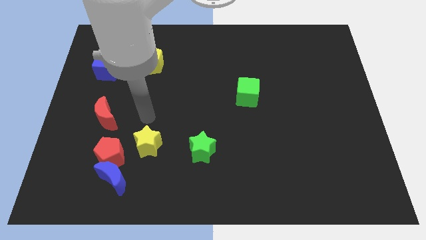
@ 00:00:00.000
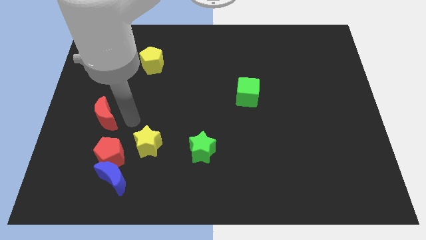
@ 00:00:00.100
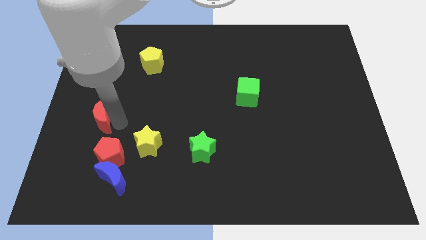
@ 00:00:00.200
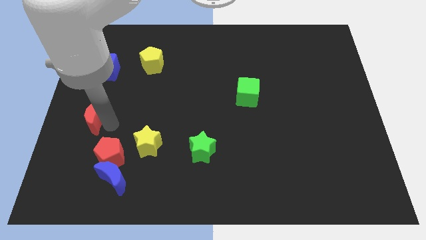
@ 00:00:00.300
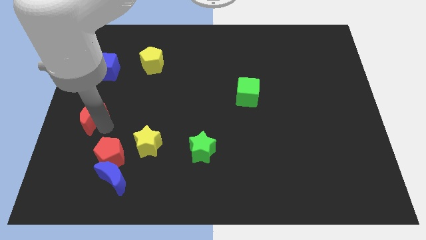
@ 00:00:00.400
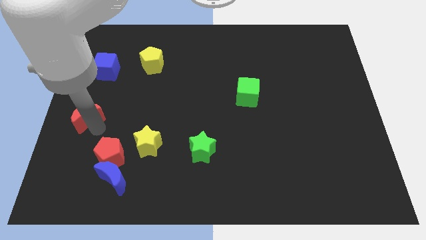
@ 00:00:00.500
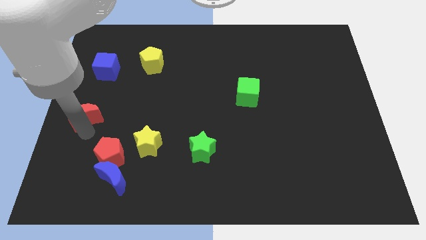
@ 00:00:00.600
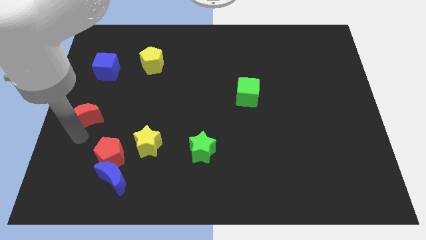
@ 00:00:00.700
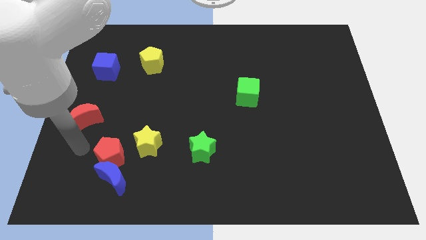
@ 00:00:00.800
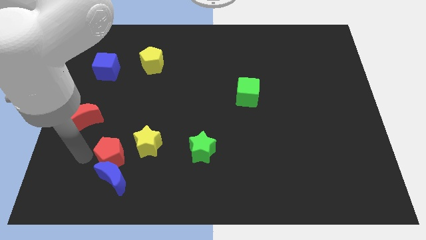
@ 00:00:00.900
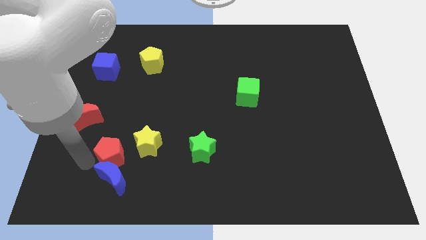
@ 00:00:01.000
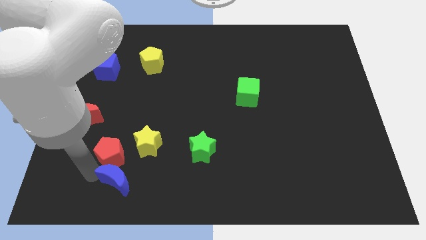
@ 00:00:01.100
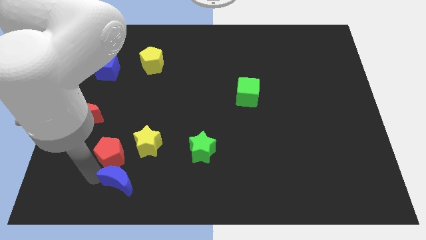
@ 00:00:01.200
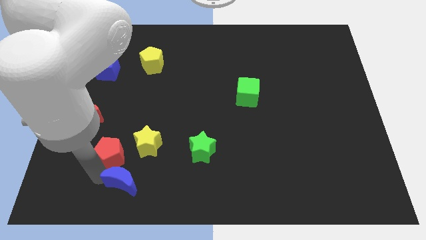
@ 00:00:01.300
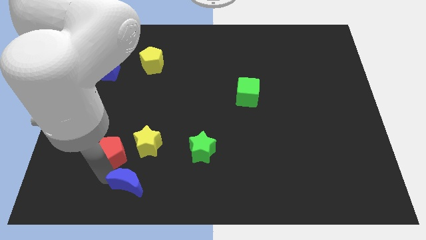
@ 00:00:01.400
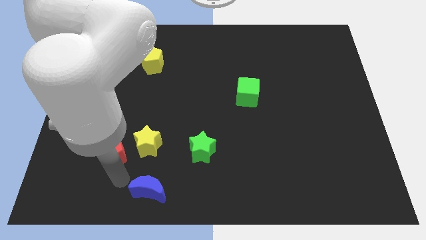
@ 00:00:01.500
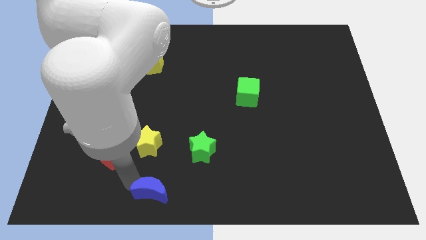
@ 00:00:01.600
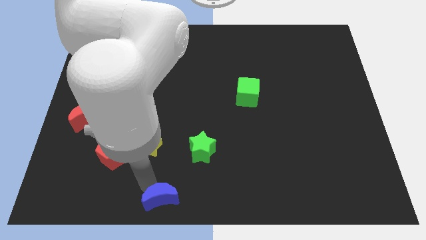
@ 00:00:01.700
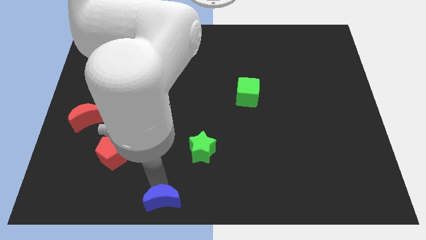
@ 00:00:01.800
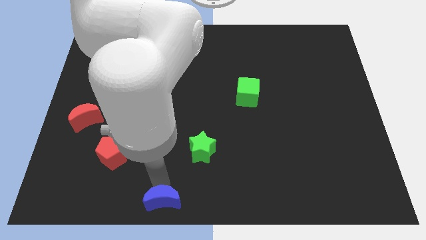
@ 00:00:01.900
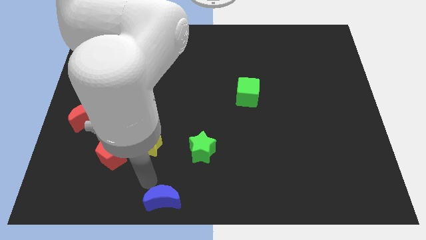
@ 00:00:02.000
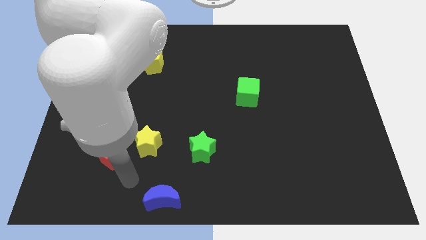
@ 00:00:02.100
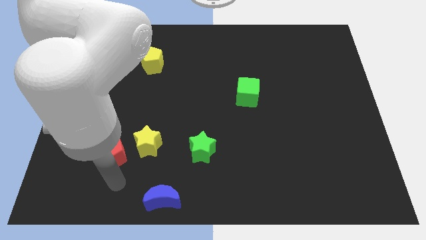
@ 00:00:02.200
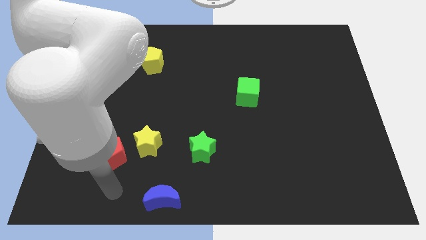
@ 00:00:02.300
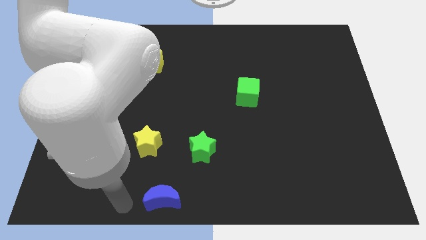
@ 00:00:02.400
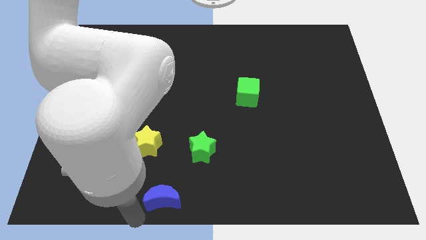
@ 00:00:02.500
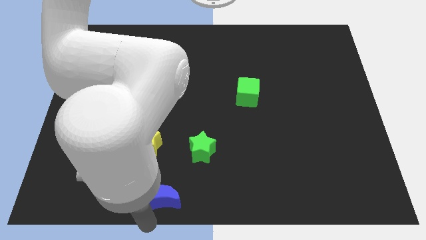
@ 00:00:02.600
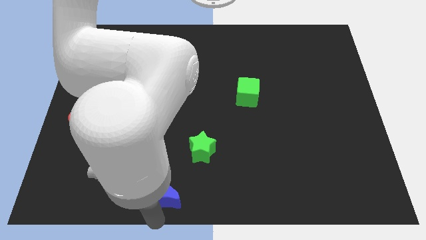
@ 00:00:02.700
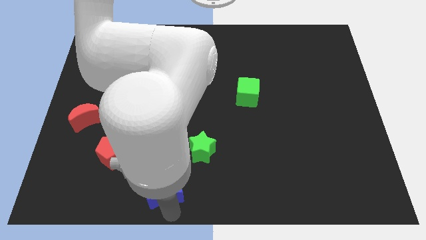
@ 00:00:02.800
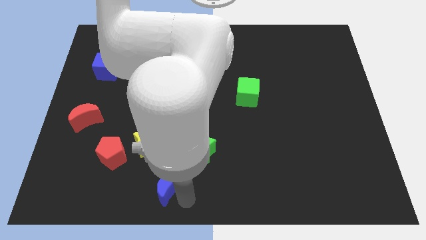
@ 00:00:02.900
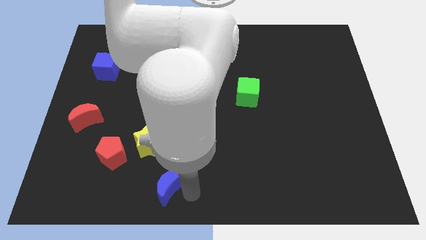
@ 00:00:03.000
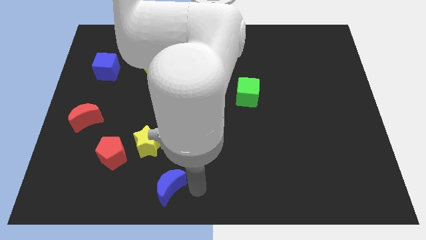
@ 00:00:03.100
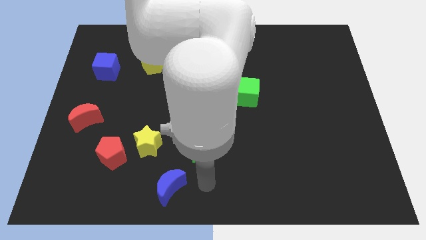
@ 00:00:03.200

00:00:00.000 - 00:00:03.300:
place the blue moon diagonal to the red pentagon

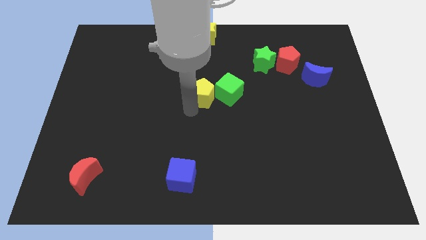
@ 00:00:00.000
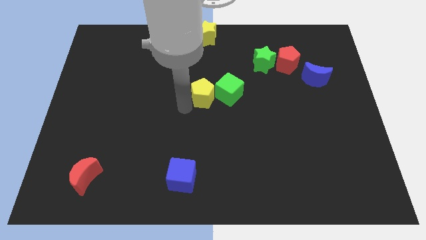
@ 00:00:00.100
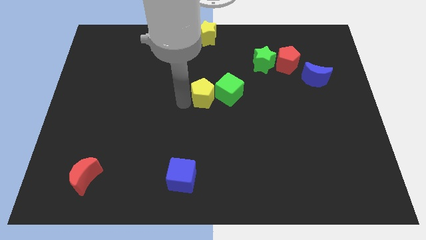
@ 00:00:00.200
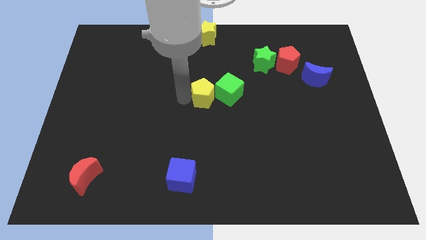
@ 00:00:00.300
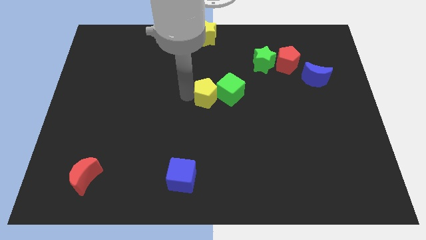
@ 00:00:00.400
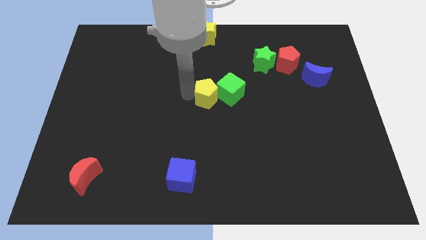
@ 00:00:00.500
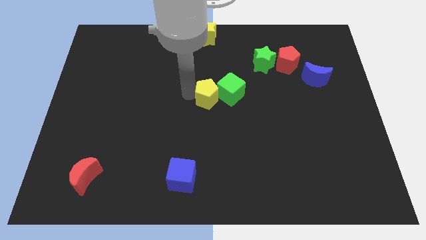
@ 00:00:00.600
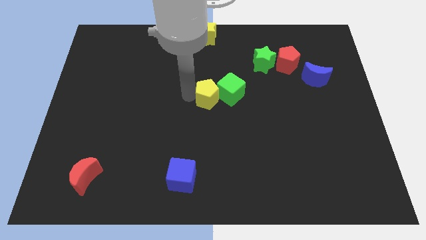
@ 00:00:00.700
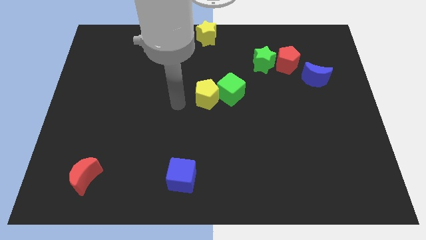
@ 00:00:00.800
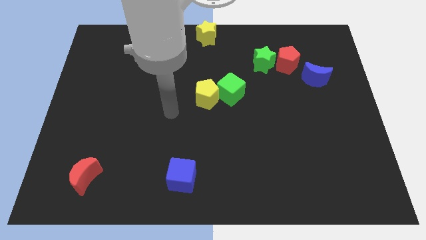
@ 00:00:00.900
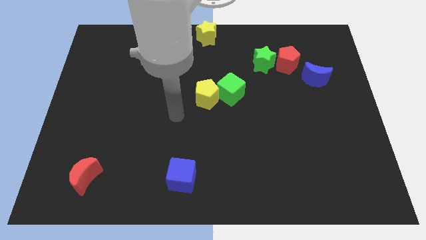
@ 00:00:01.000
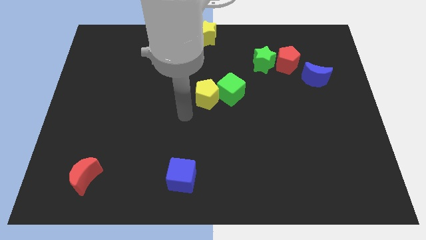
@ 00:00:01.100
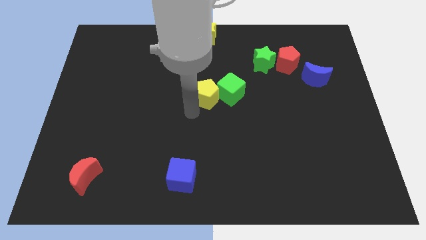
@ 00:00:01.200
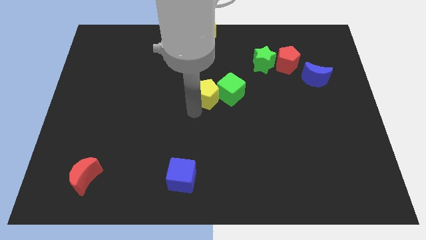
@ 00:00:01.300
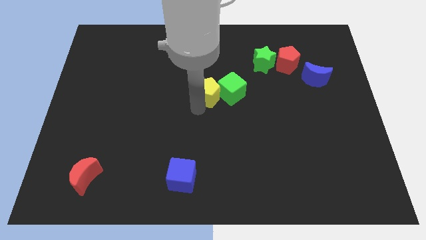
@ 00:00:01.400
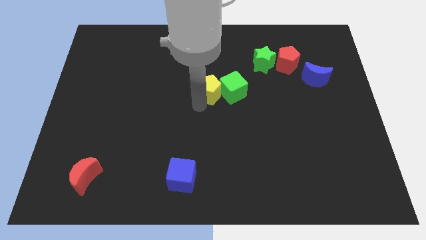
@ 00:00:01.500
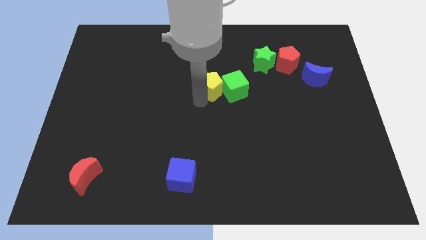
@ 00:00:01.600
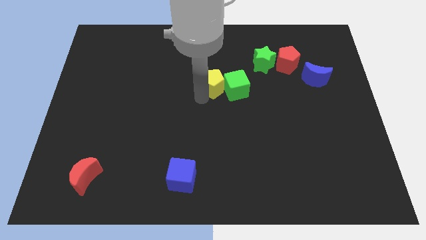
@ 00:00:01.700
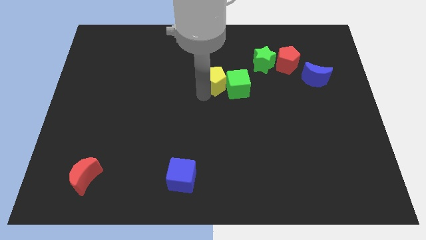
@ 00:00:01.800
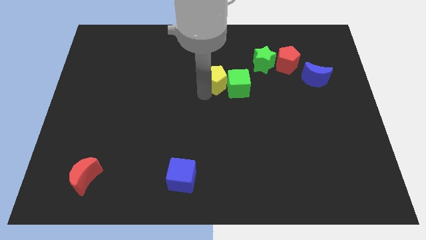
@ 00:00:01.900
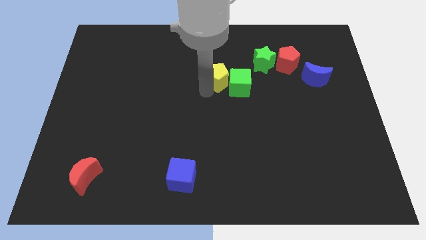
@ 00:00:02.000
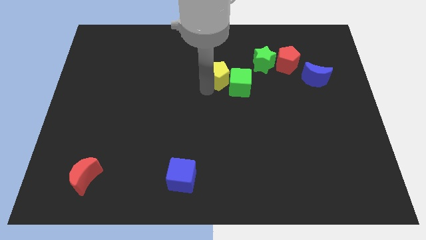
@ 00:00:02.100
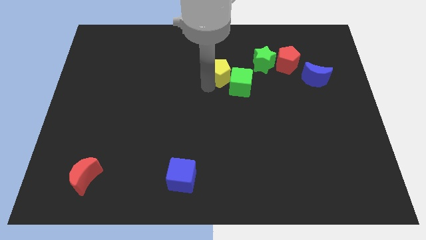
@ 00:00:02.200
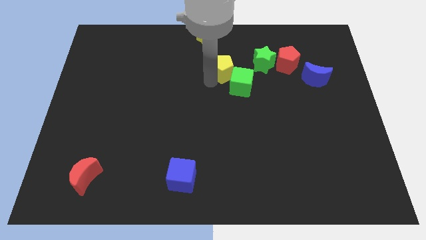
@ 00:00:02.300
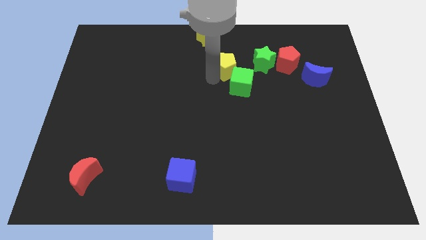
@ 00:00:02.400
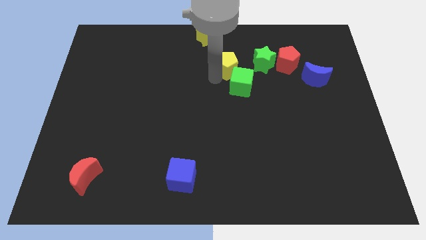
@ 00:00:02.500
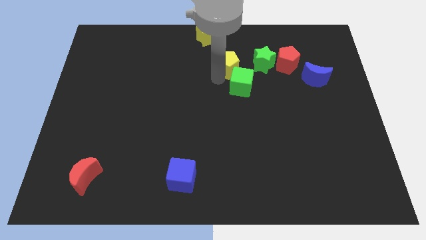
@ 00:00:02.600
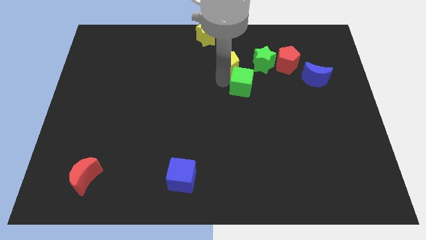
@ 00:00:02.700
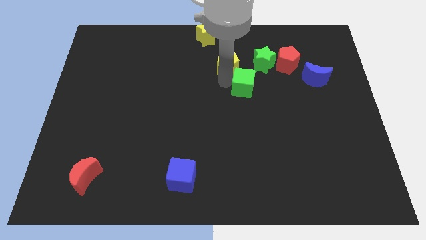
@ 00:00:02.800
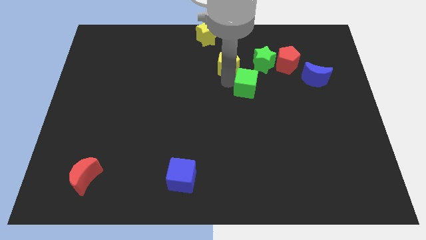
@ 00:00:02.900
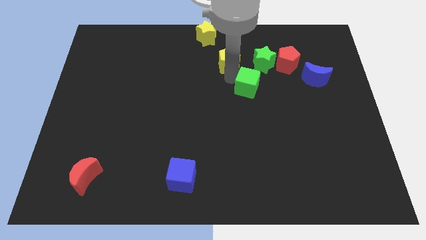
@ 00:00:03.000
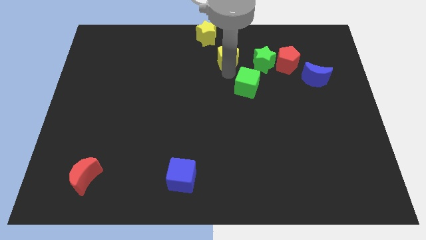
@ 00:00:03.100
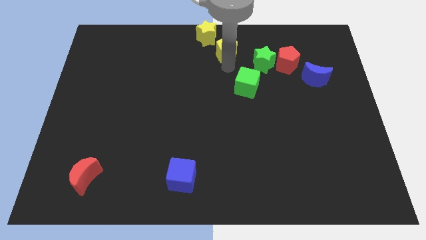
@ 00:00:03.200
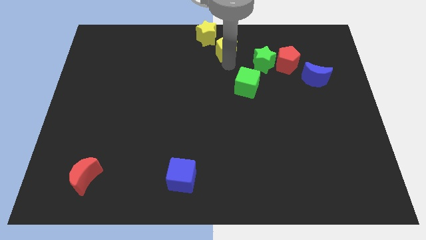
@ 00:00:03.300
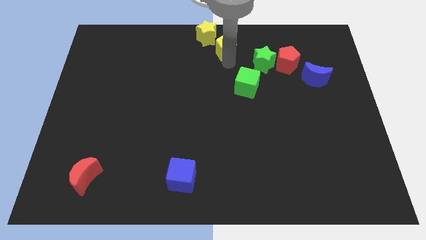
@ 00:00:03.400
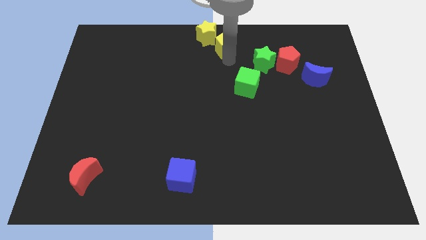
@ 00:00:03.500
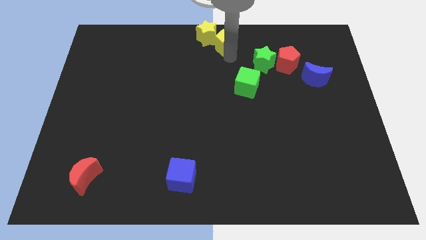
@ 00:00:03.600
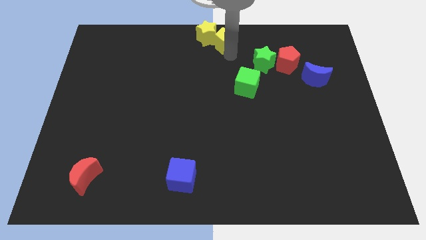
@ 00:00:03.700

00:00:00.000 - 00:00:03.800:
separate the yellow pentagon from the green cube

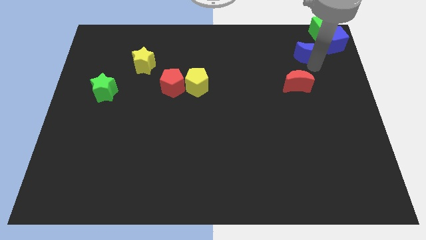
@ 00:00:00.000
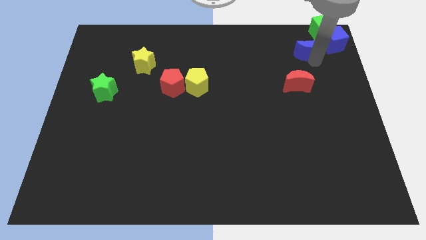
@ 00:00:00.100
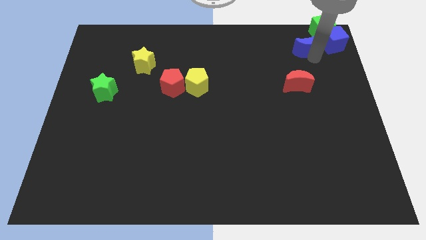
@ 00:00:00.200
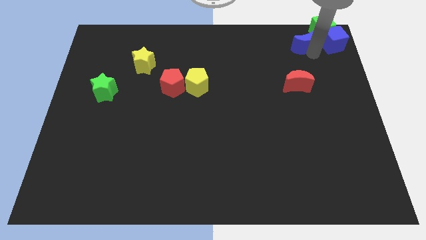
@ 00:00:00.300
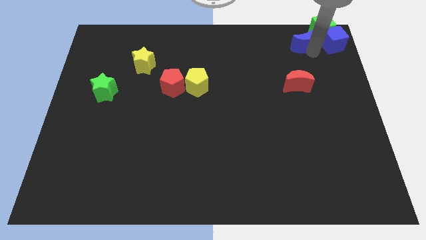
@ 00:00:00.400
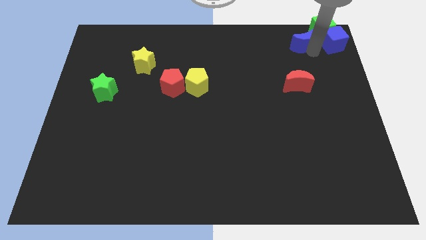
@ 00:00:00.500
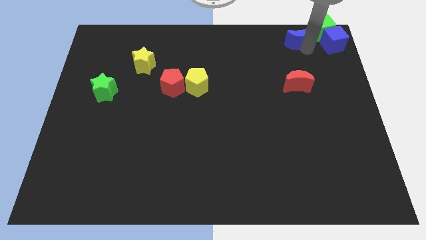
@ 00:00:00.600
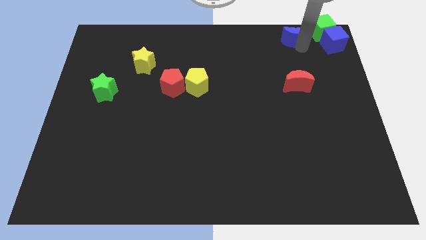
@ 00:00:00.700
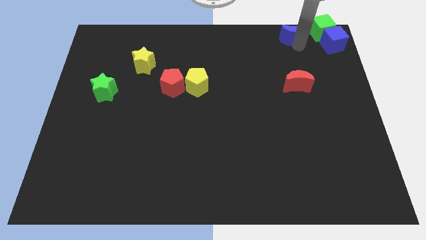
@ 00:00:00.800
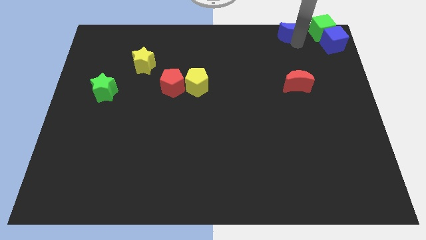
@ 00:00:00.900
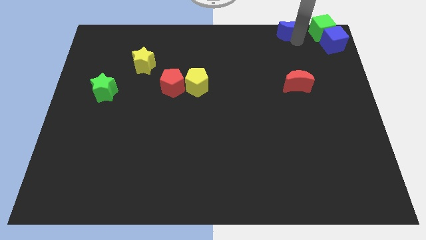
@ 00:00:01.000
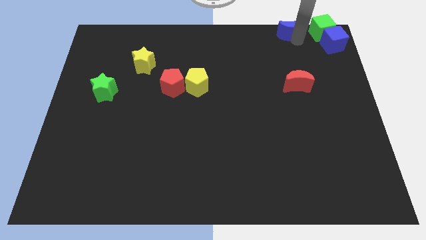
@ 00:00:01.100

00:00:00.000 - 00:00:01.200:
place the blue crescent to the left side of the green cube

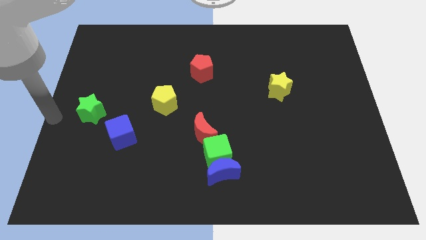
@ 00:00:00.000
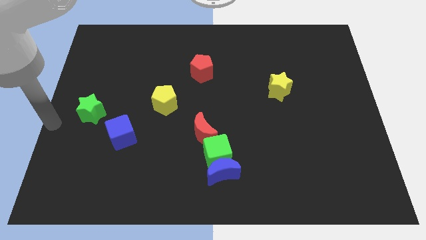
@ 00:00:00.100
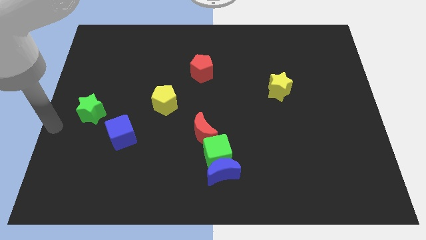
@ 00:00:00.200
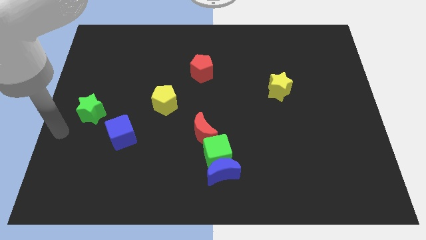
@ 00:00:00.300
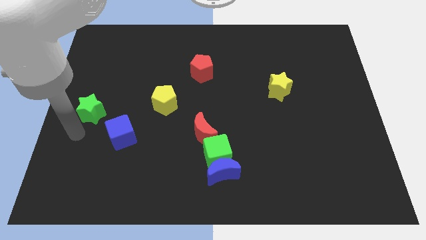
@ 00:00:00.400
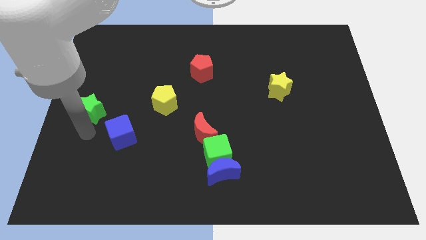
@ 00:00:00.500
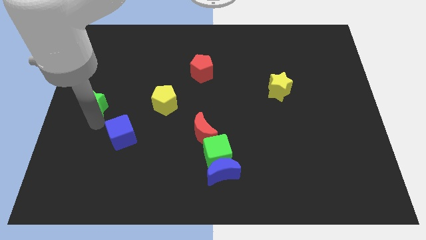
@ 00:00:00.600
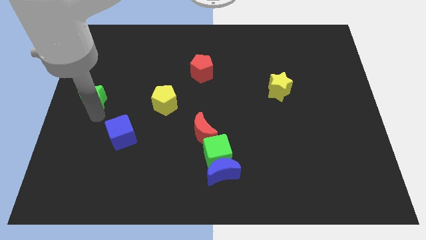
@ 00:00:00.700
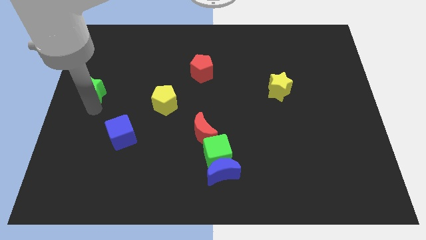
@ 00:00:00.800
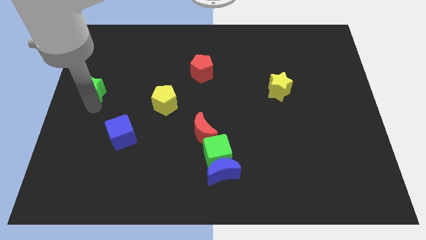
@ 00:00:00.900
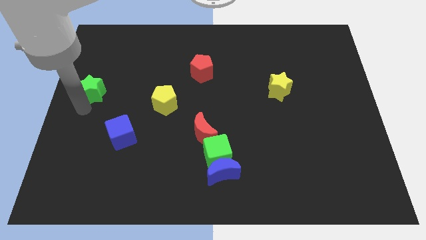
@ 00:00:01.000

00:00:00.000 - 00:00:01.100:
move the green star towards the top left of the board
